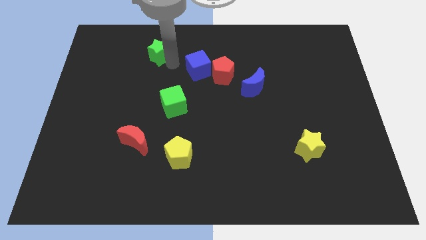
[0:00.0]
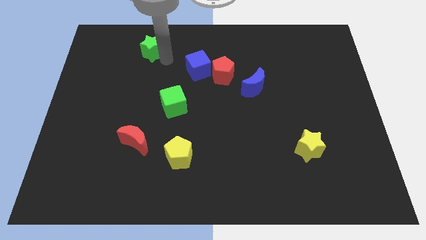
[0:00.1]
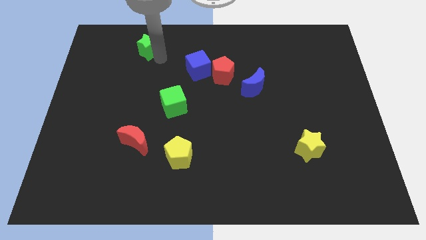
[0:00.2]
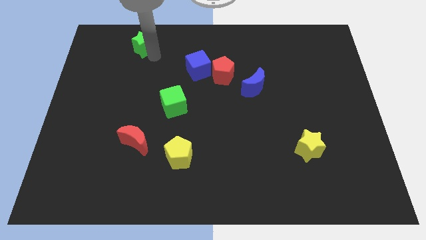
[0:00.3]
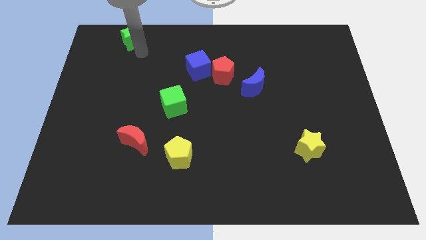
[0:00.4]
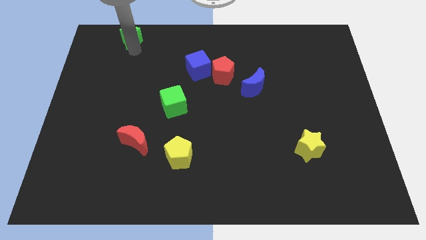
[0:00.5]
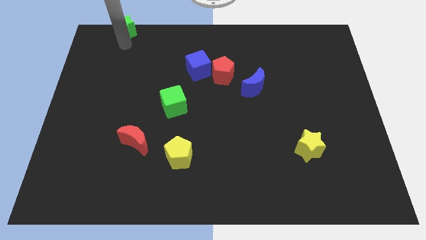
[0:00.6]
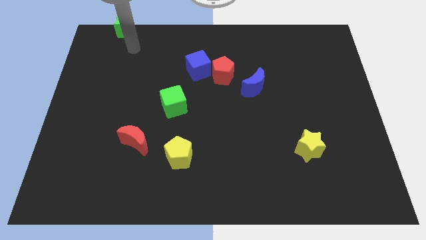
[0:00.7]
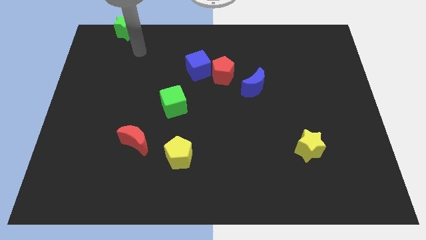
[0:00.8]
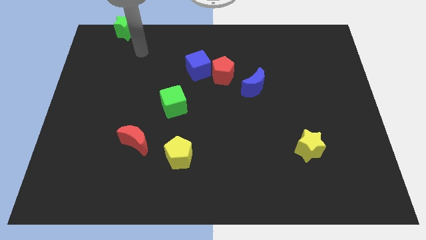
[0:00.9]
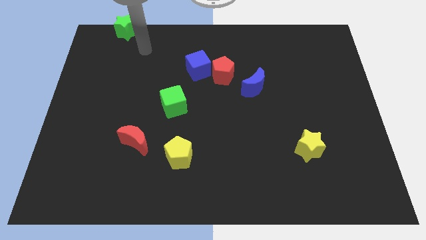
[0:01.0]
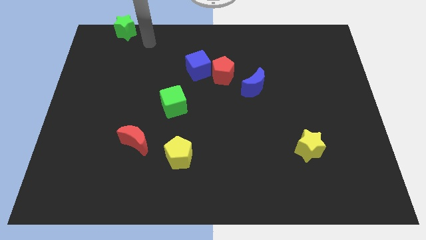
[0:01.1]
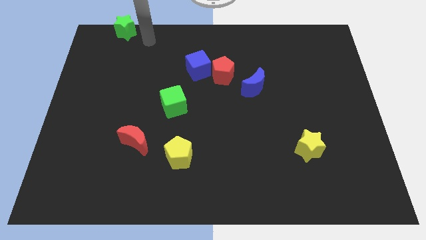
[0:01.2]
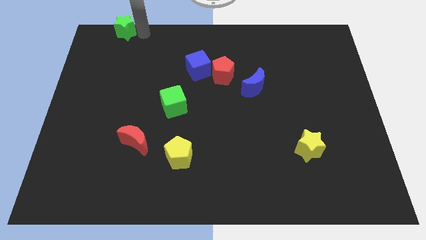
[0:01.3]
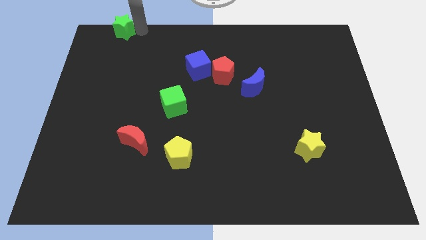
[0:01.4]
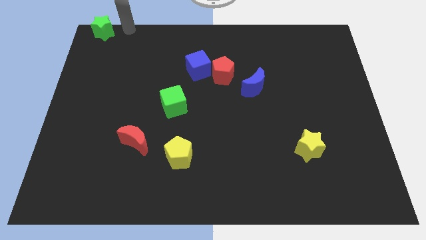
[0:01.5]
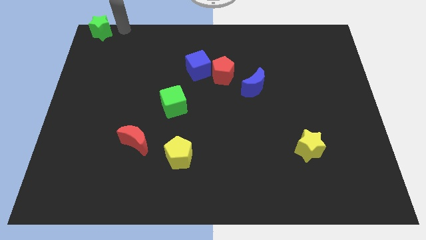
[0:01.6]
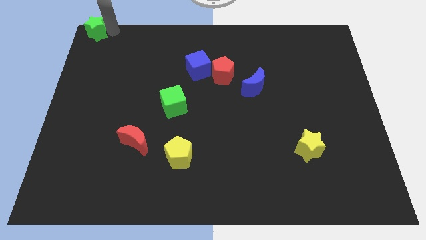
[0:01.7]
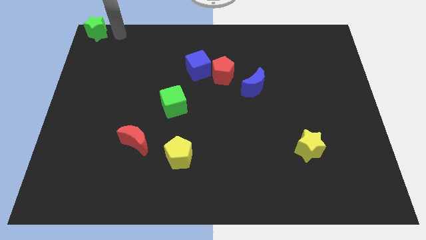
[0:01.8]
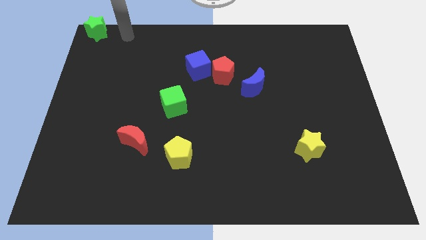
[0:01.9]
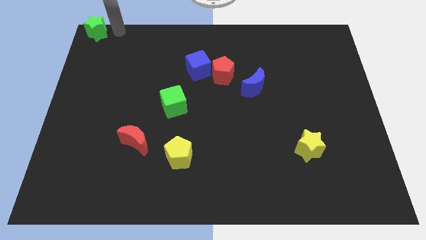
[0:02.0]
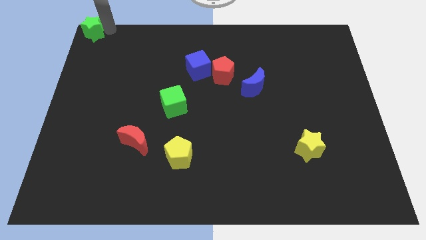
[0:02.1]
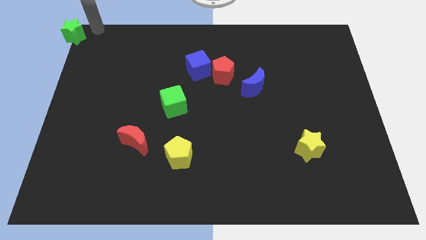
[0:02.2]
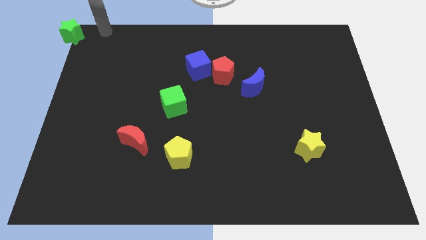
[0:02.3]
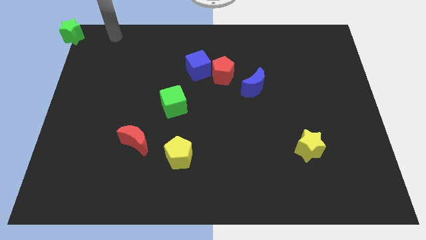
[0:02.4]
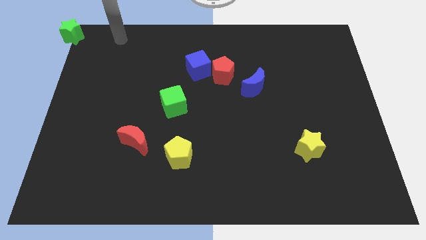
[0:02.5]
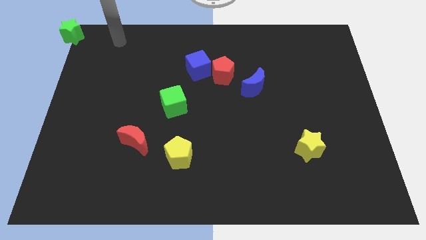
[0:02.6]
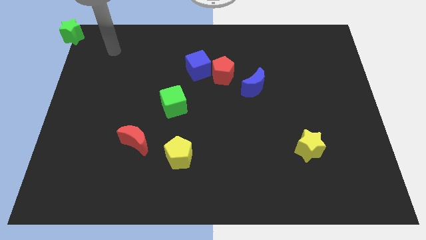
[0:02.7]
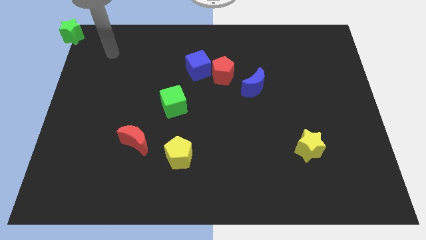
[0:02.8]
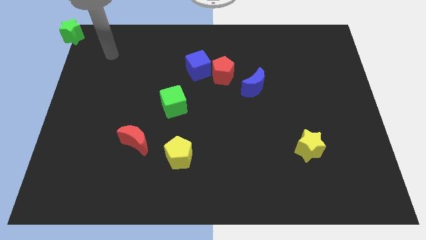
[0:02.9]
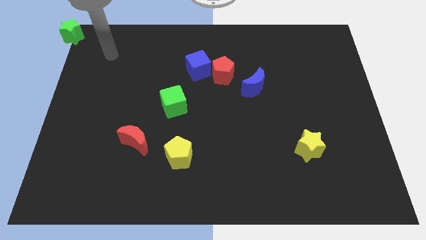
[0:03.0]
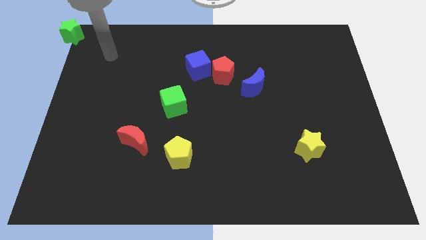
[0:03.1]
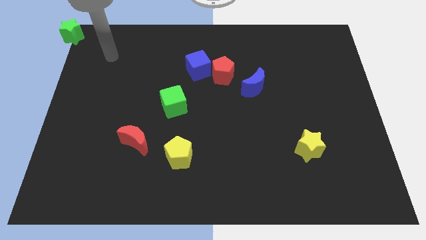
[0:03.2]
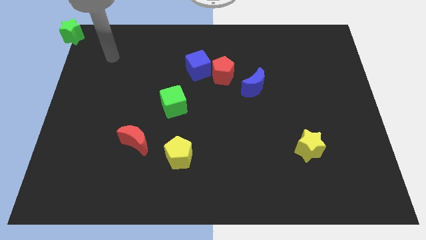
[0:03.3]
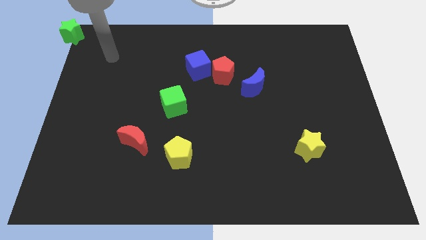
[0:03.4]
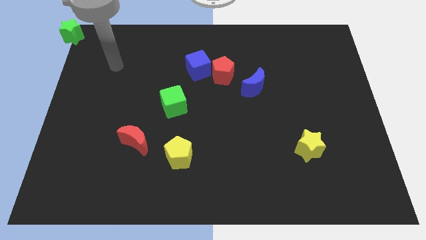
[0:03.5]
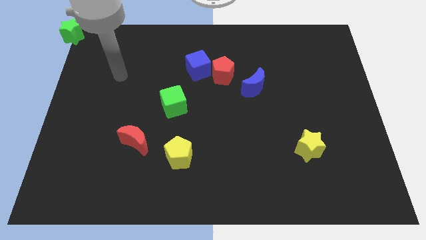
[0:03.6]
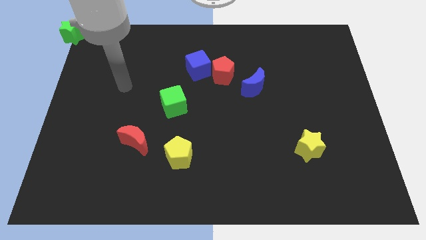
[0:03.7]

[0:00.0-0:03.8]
move the green star to the top left corner

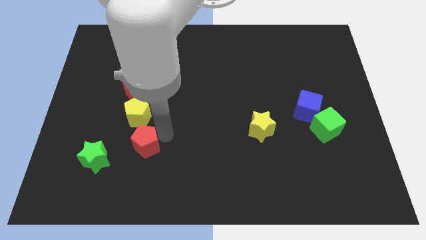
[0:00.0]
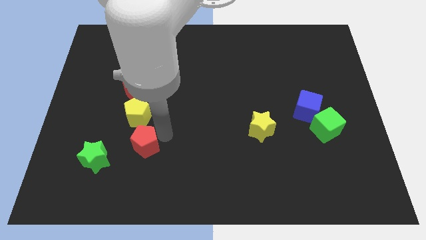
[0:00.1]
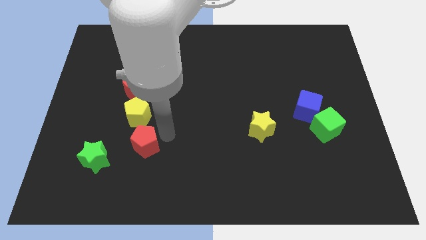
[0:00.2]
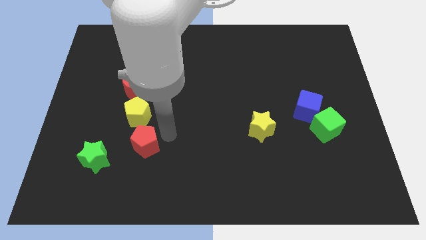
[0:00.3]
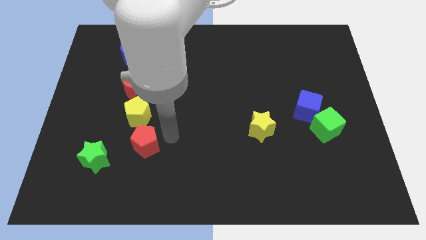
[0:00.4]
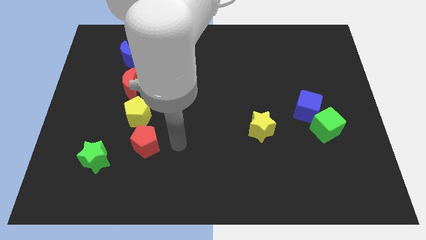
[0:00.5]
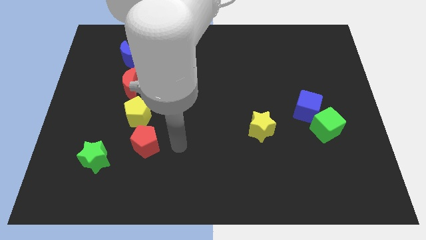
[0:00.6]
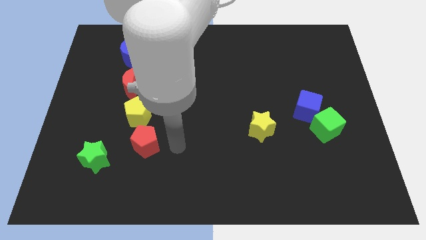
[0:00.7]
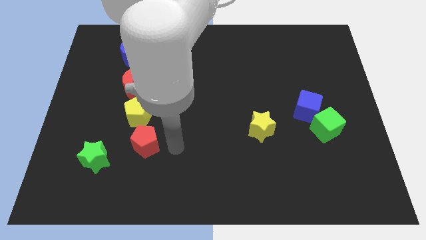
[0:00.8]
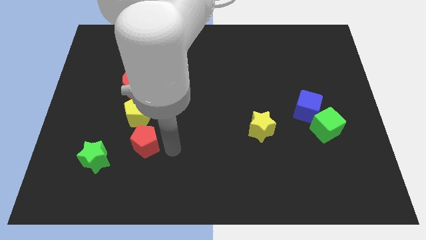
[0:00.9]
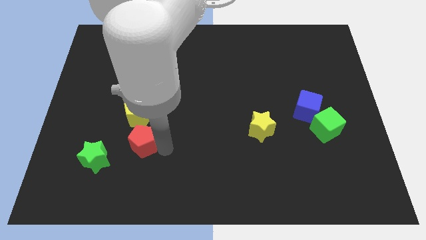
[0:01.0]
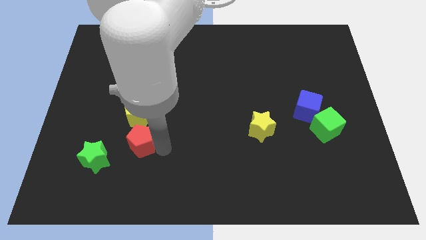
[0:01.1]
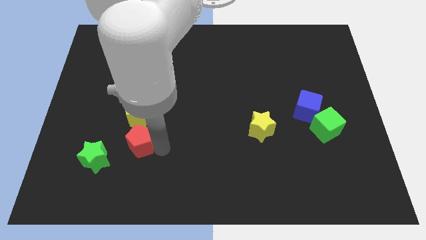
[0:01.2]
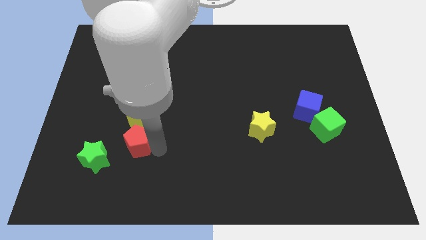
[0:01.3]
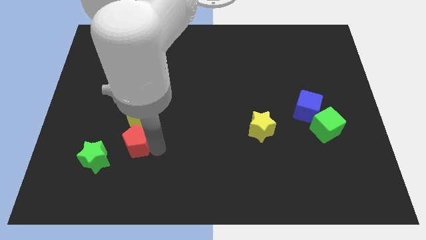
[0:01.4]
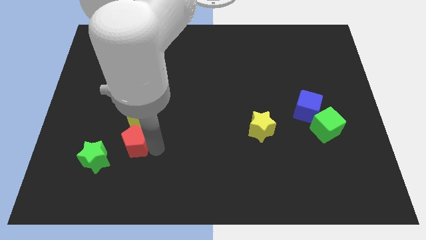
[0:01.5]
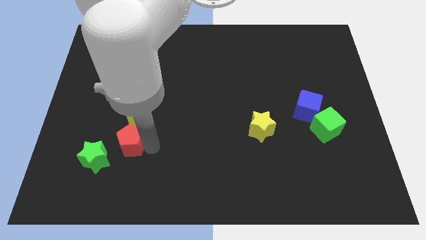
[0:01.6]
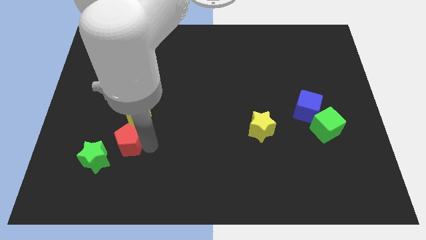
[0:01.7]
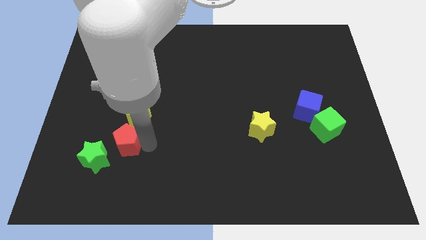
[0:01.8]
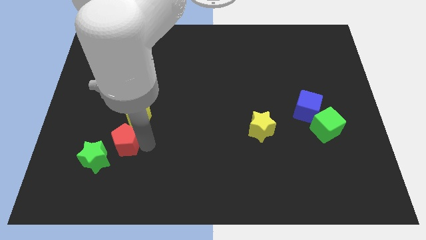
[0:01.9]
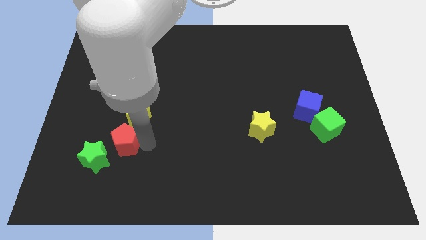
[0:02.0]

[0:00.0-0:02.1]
move red pentagon to the left

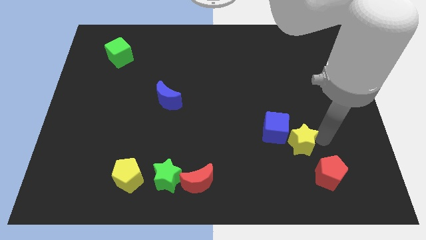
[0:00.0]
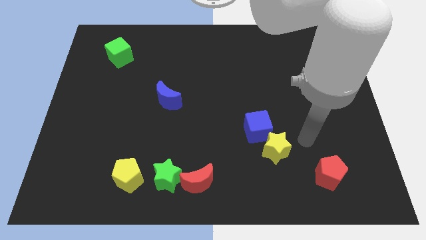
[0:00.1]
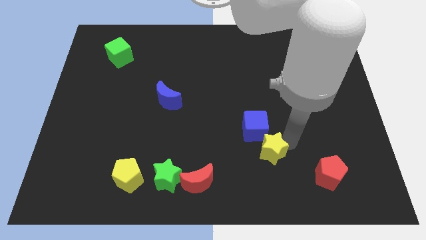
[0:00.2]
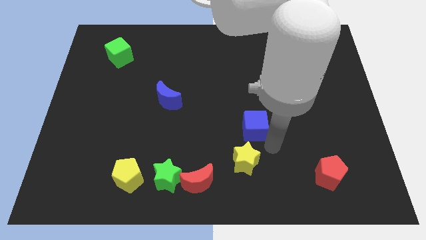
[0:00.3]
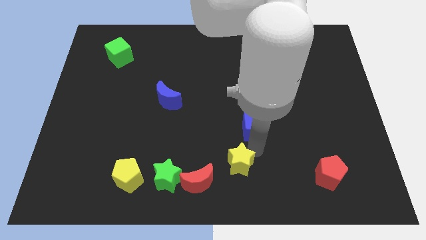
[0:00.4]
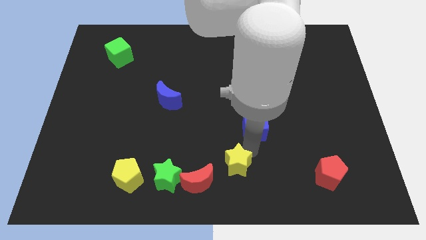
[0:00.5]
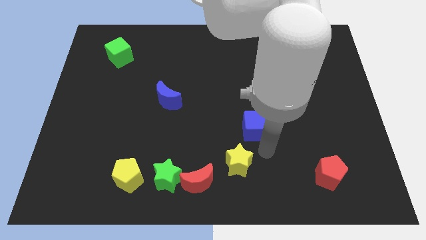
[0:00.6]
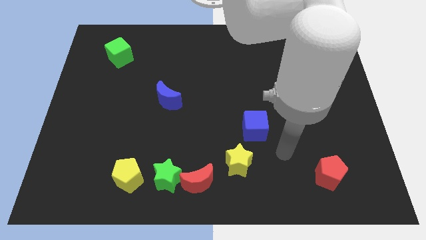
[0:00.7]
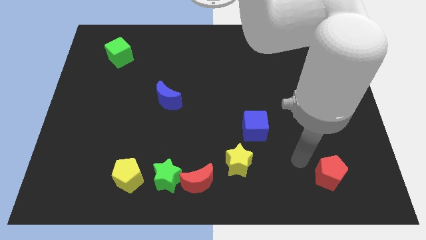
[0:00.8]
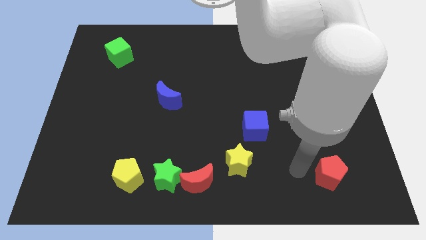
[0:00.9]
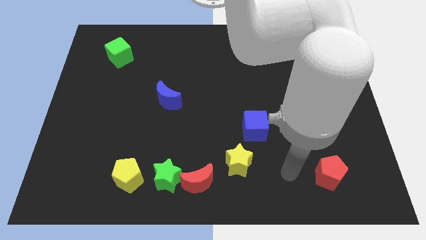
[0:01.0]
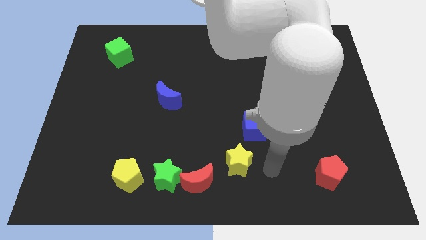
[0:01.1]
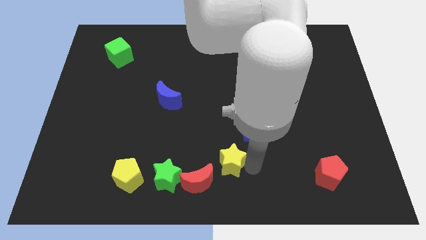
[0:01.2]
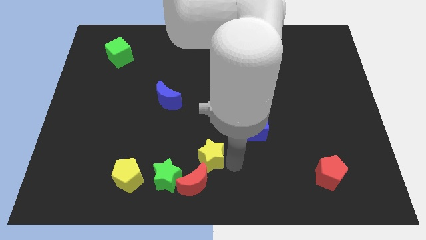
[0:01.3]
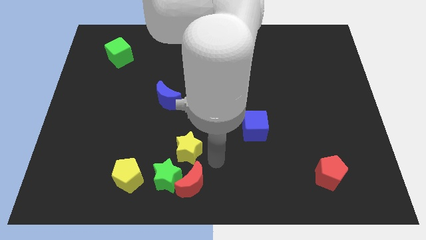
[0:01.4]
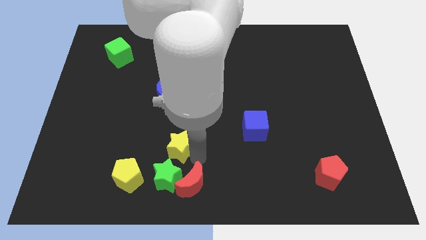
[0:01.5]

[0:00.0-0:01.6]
put the yellow star above the red moon

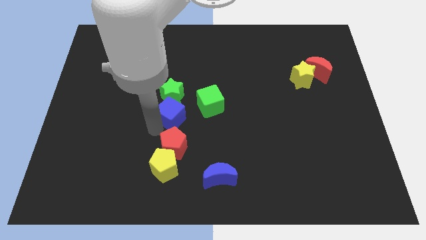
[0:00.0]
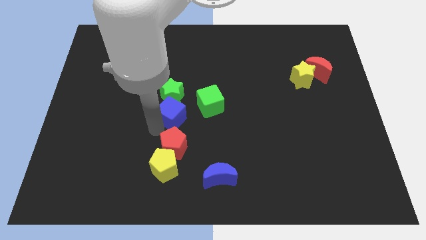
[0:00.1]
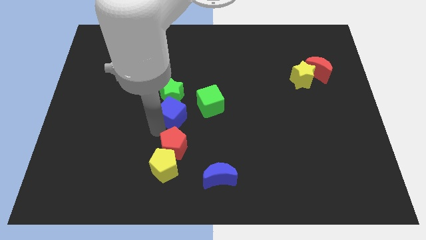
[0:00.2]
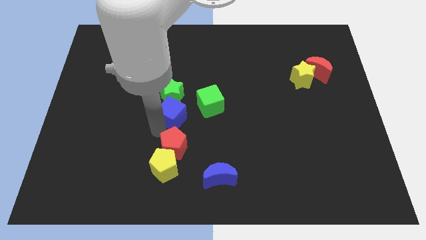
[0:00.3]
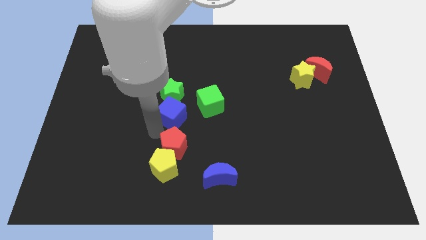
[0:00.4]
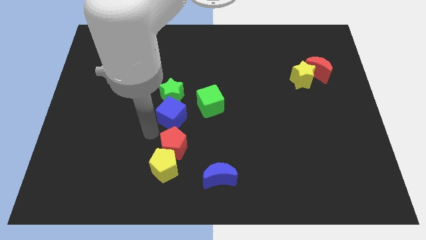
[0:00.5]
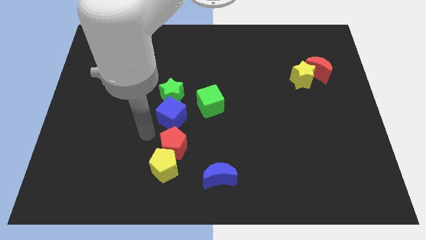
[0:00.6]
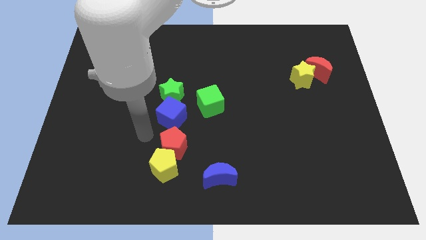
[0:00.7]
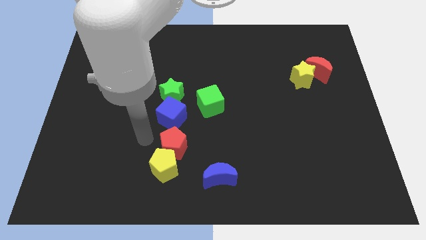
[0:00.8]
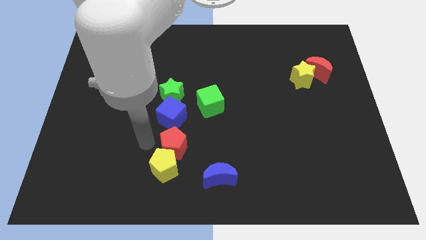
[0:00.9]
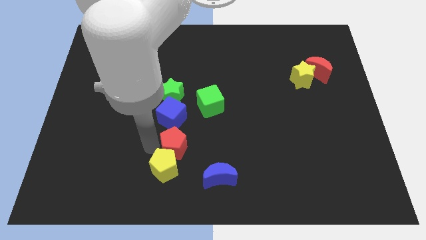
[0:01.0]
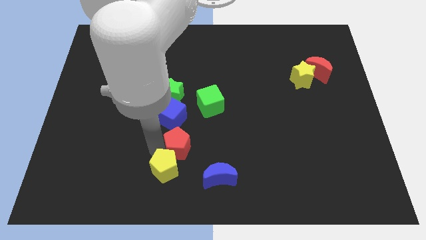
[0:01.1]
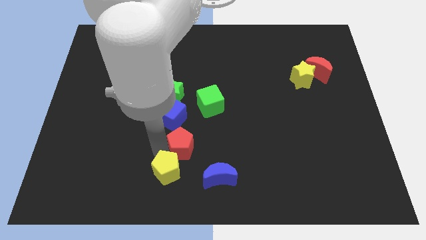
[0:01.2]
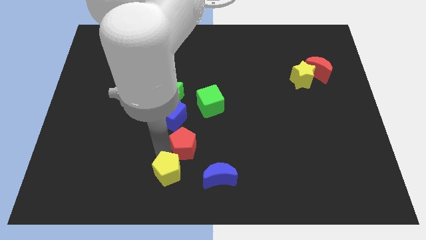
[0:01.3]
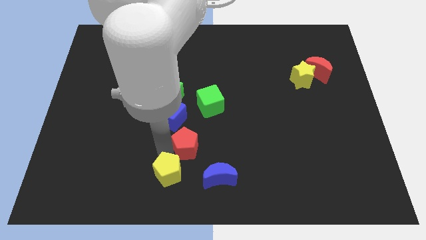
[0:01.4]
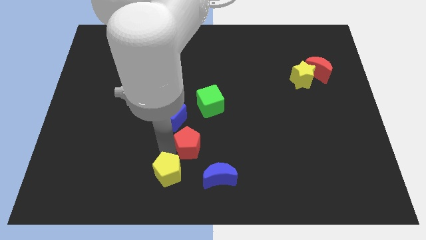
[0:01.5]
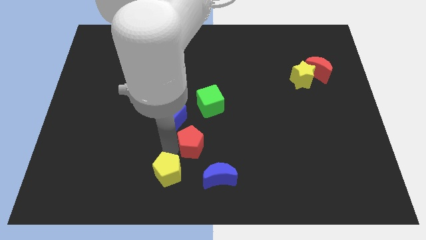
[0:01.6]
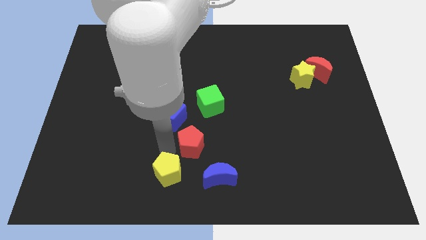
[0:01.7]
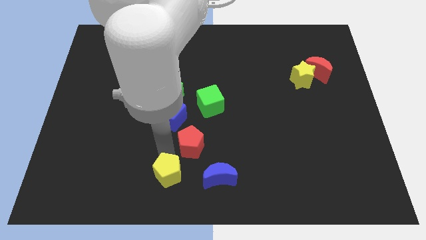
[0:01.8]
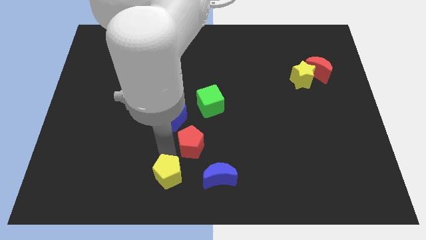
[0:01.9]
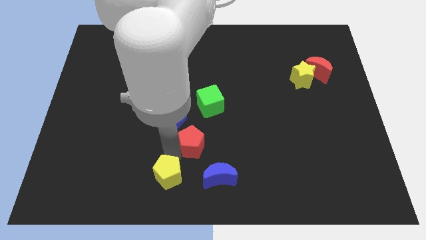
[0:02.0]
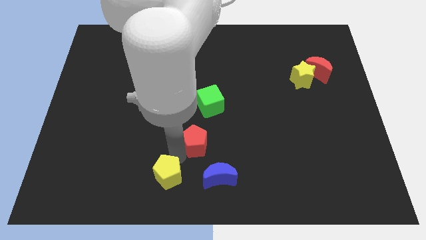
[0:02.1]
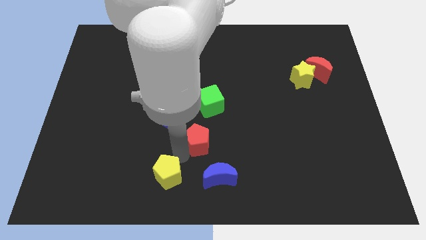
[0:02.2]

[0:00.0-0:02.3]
move the red pentagon slightly to the right
